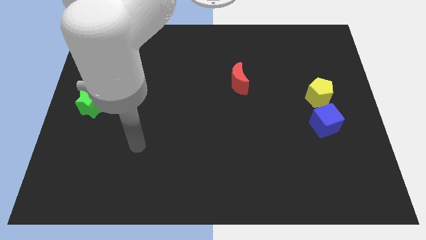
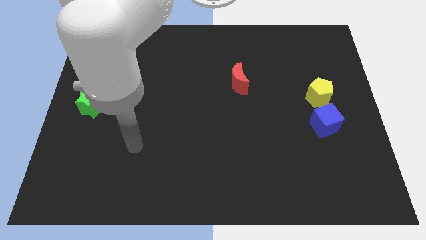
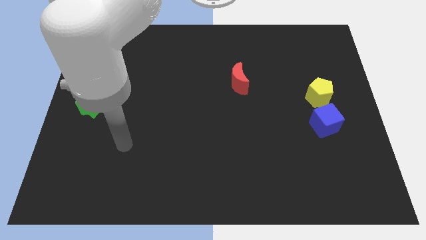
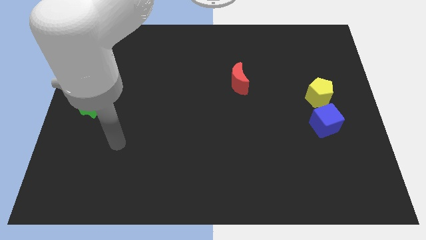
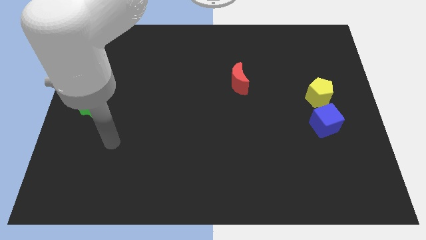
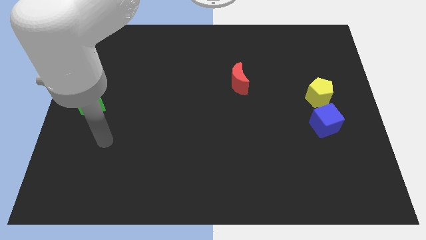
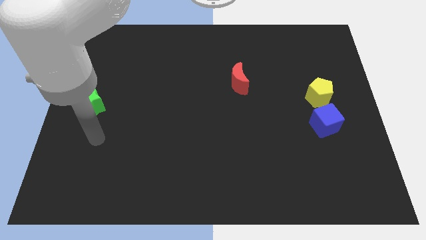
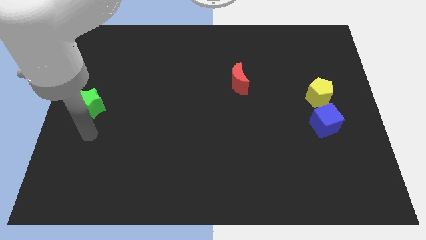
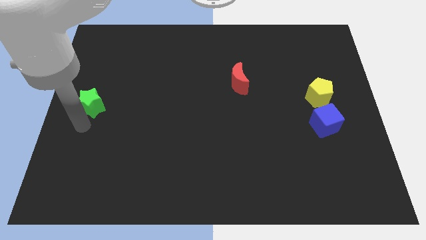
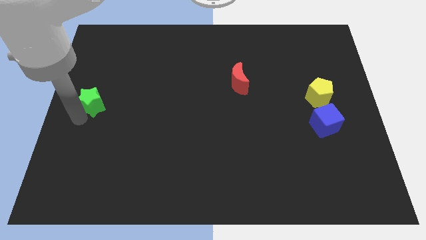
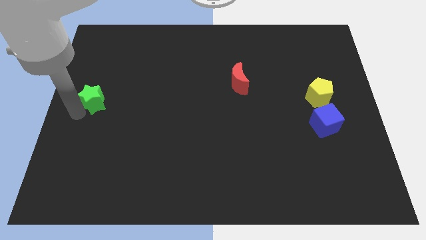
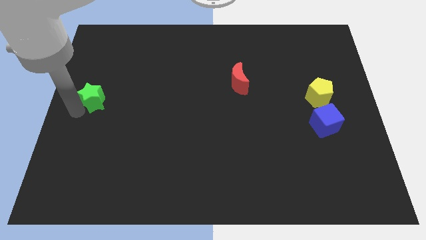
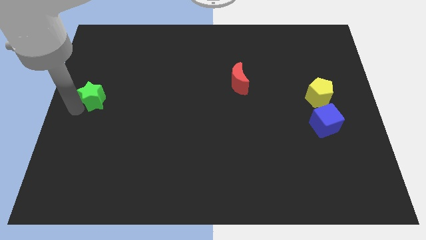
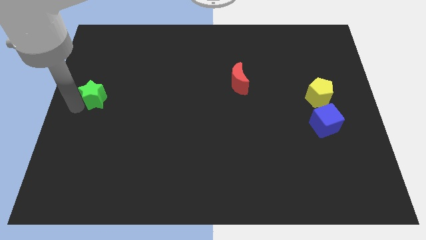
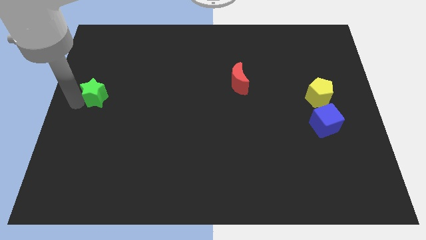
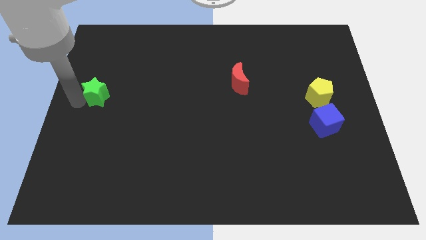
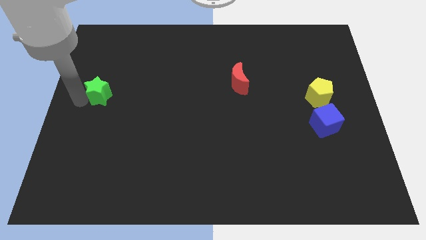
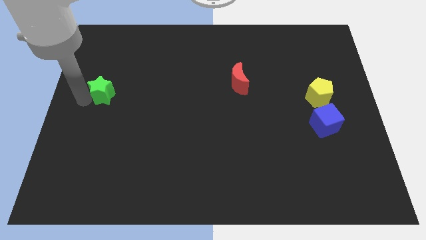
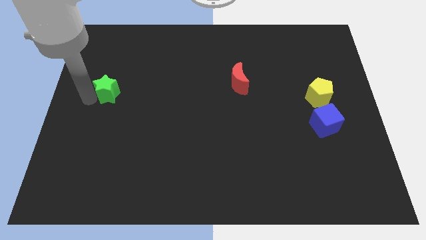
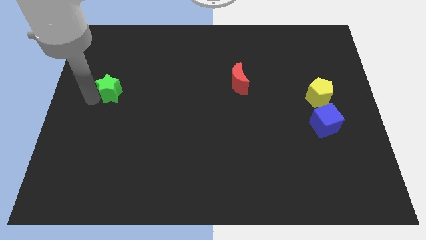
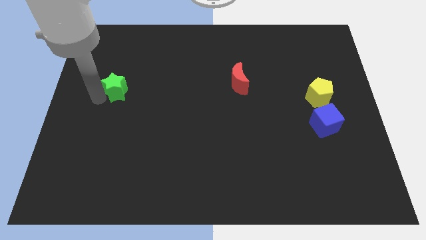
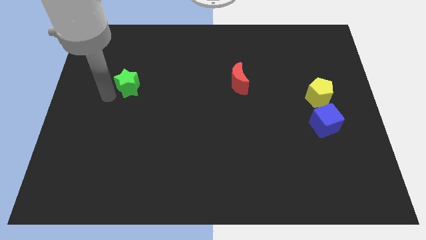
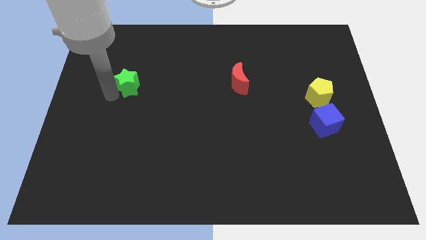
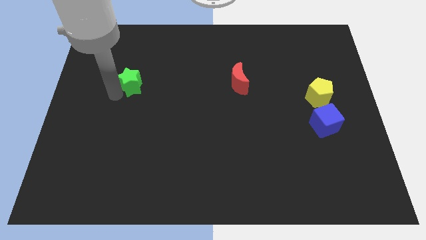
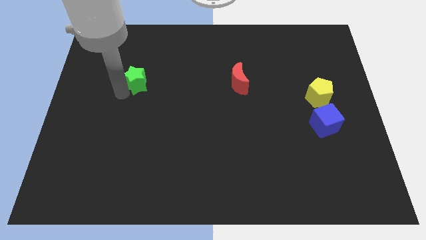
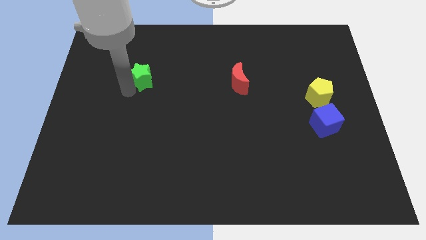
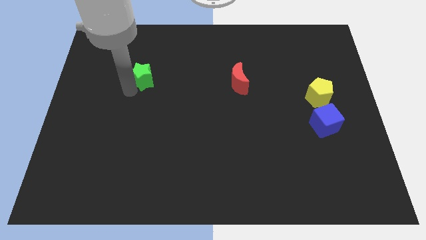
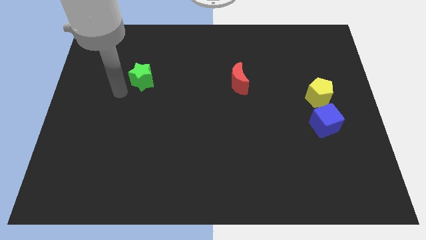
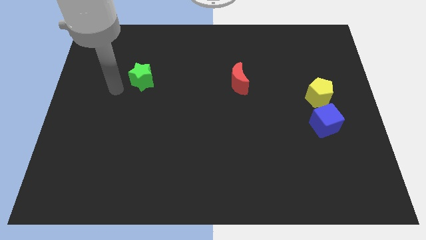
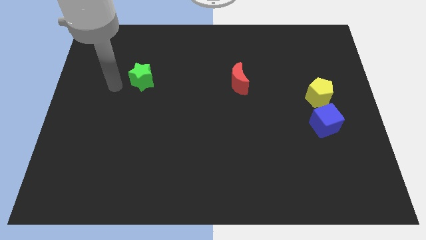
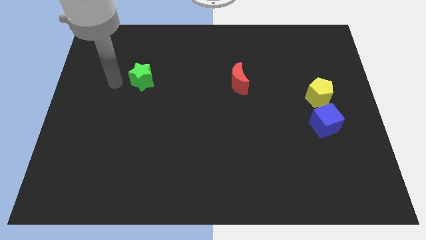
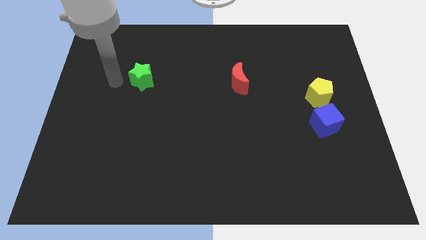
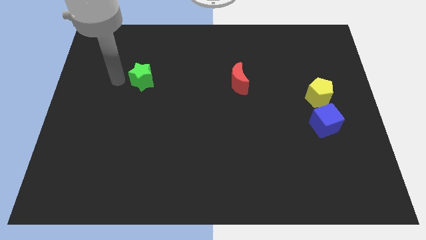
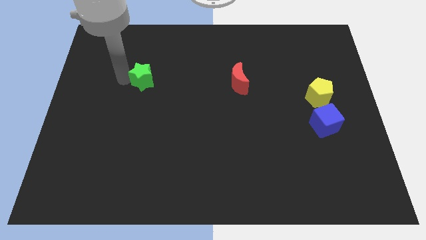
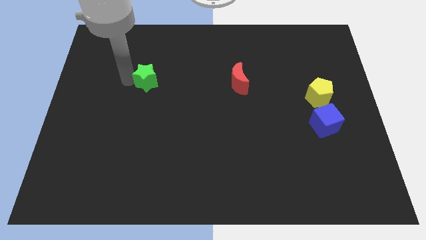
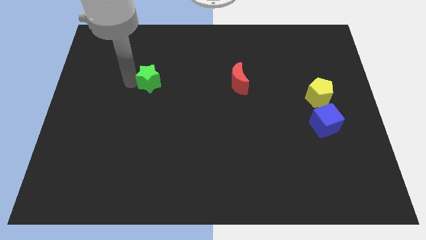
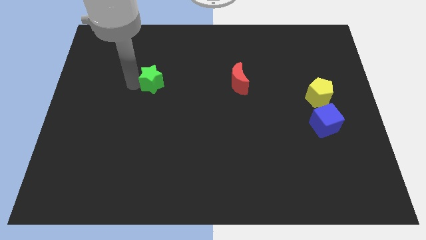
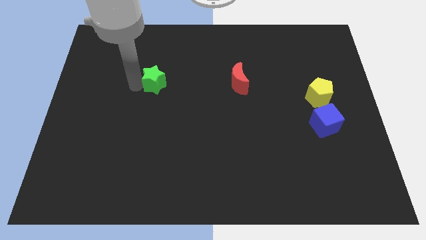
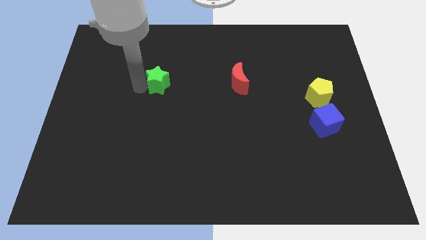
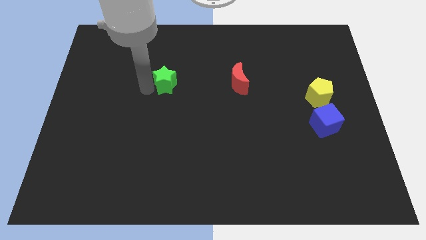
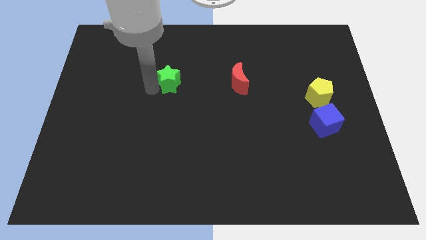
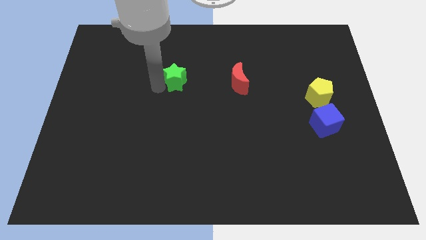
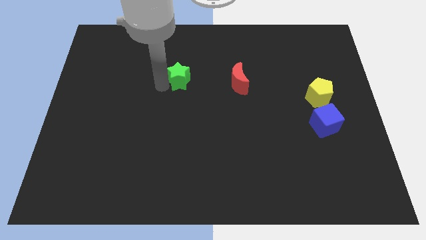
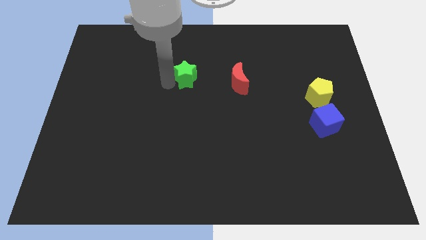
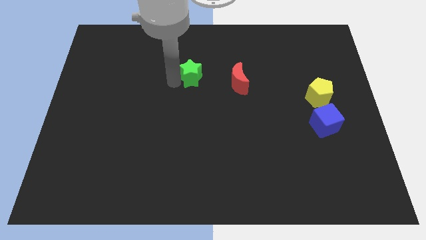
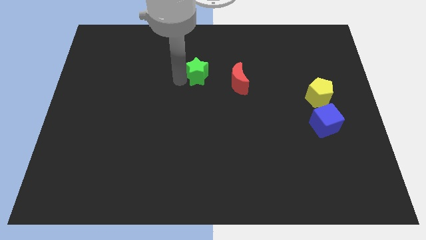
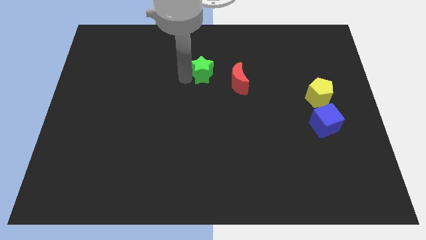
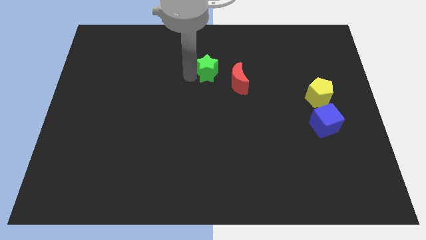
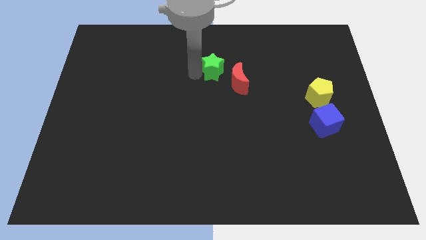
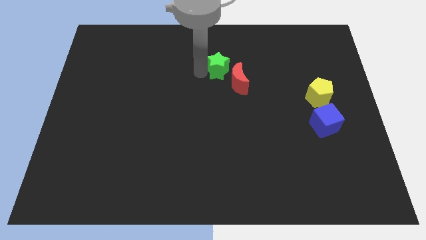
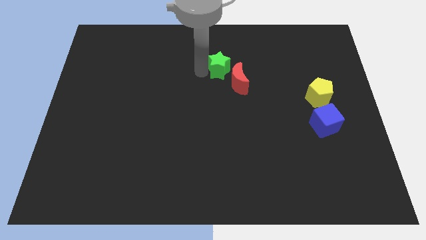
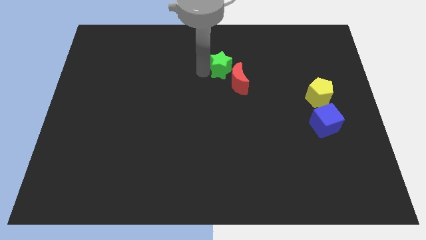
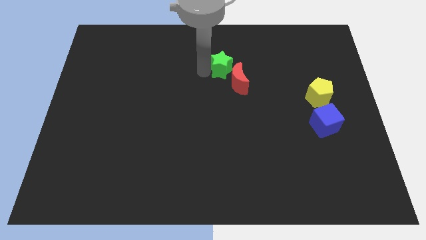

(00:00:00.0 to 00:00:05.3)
slide the green star close to the red moon

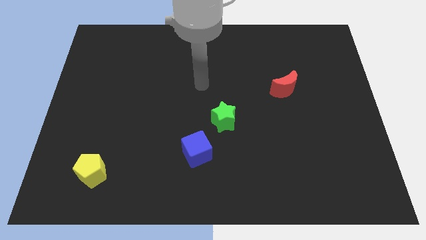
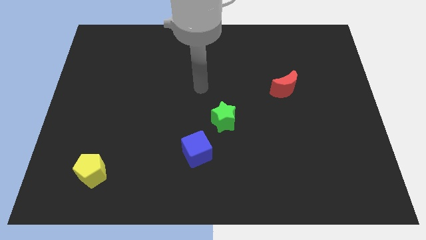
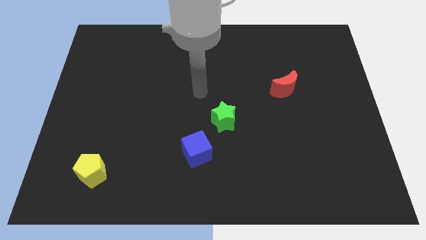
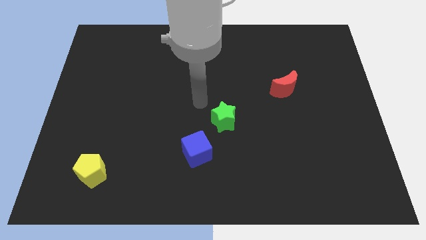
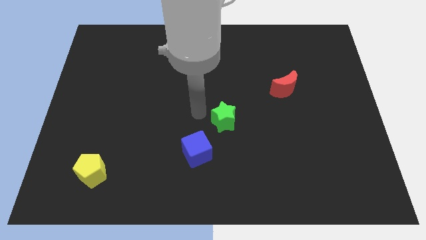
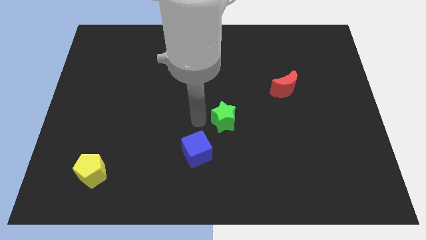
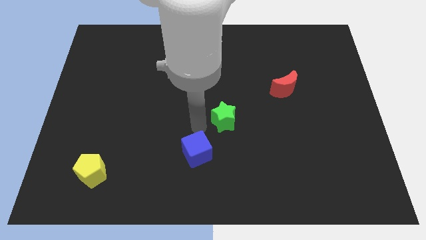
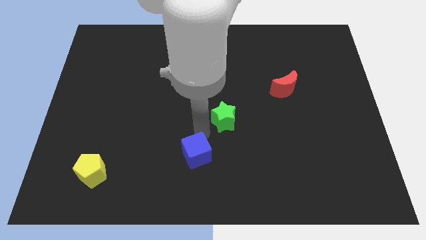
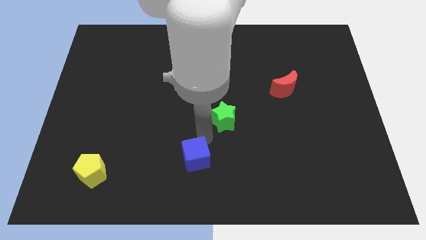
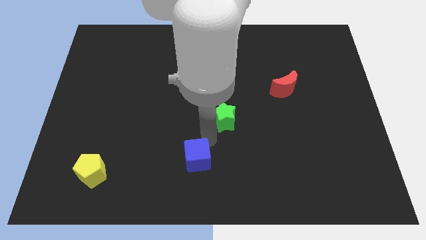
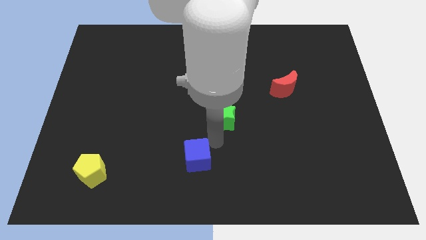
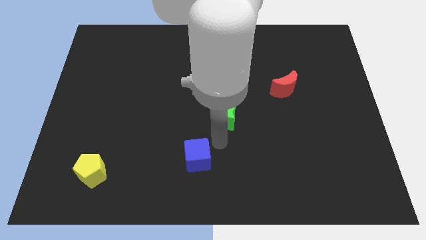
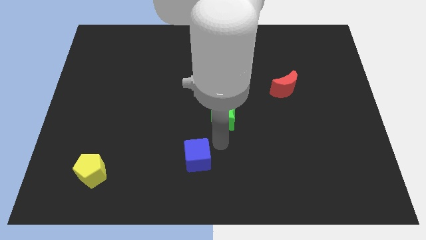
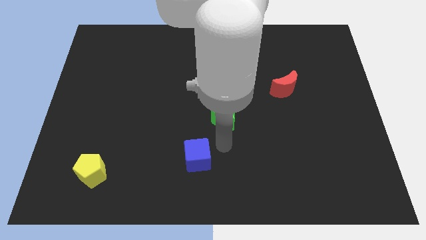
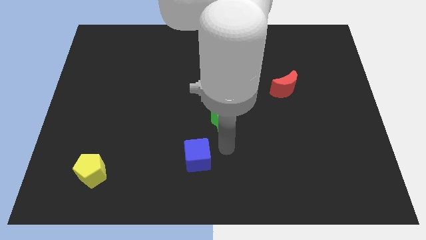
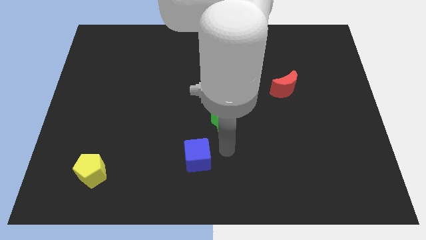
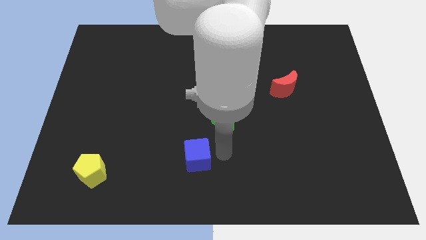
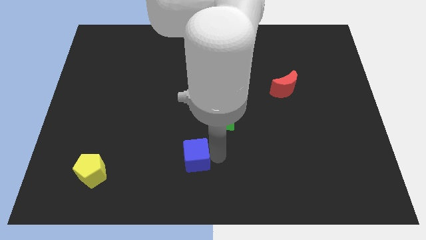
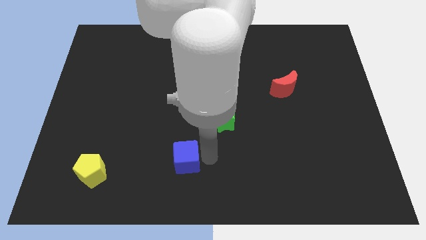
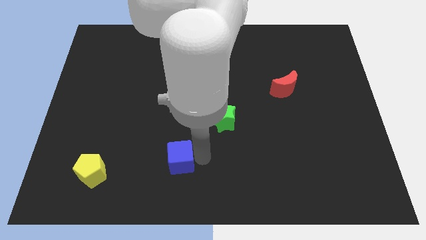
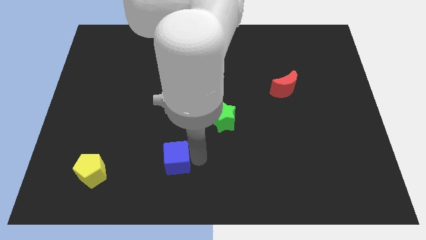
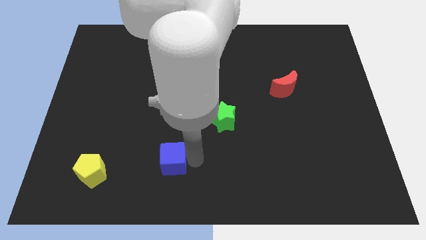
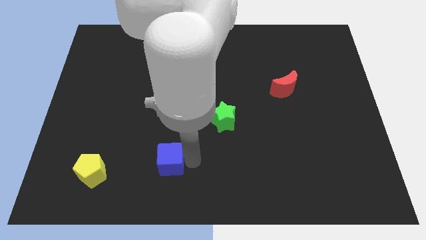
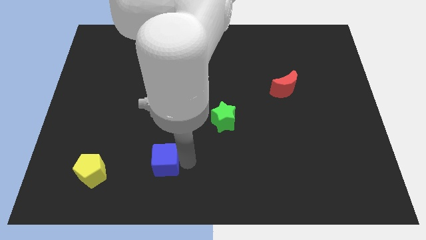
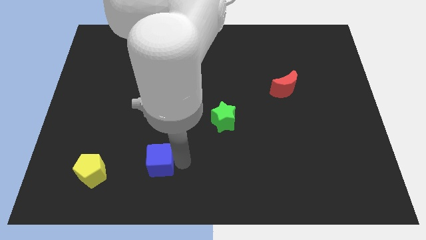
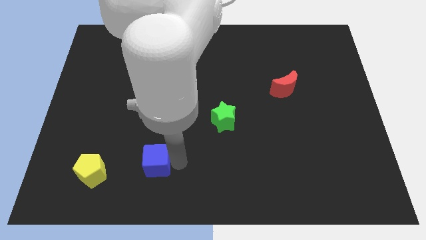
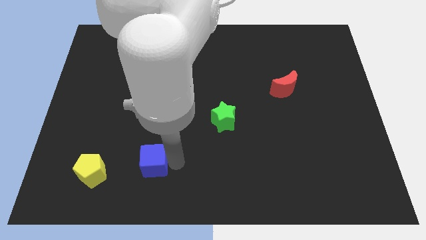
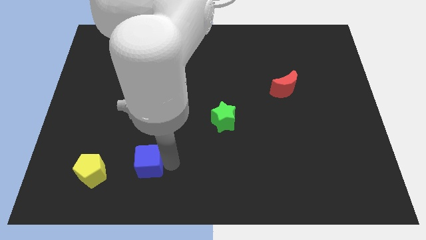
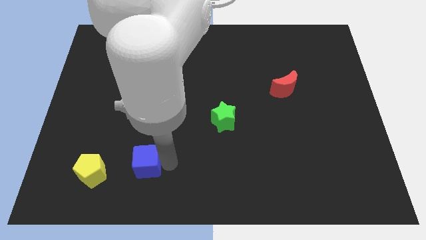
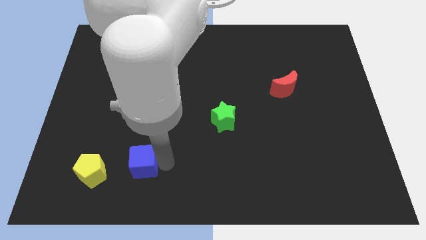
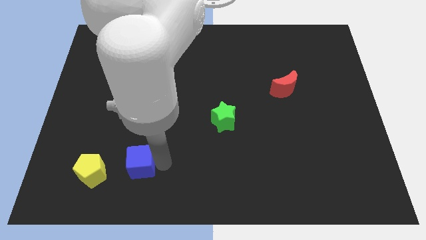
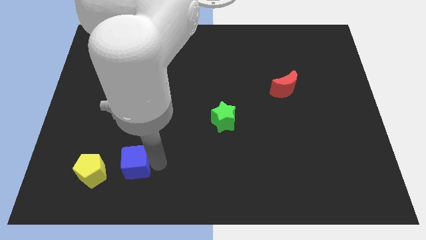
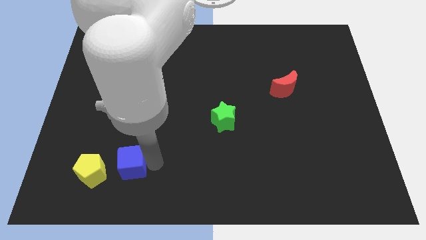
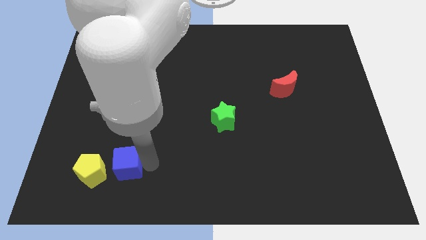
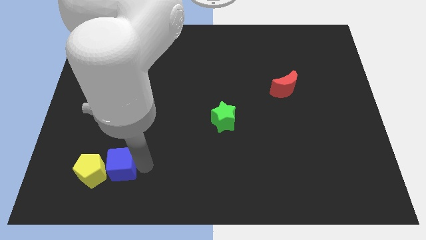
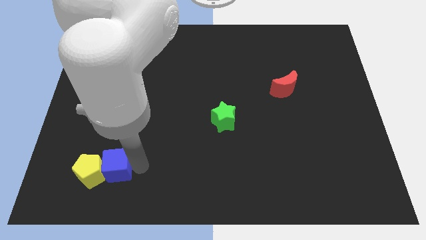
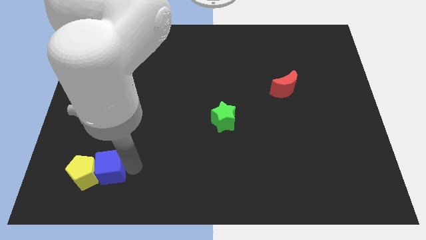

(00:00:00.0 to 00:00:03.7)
put the blue block next to the yellow block
